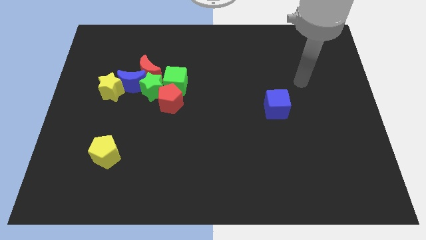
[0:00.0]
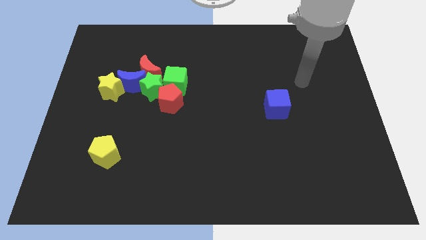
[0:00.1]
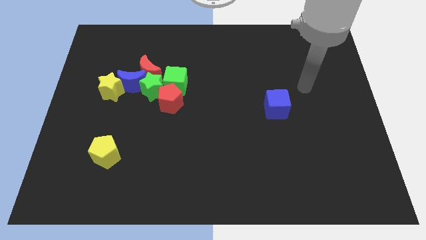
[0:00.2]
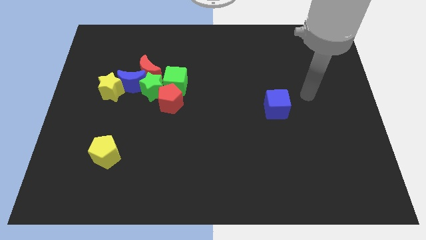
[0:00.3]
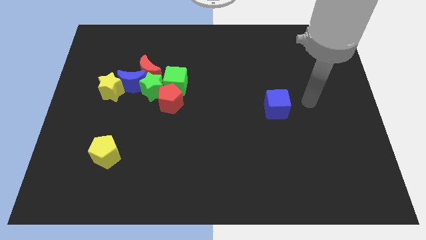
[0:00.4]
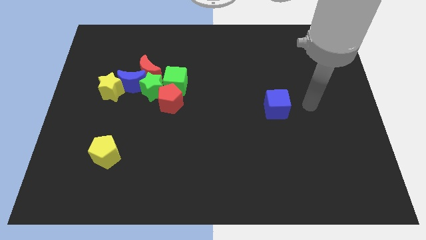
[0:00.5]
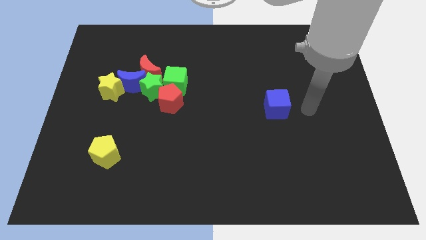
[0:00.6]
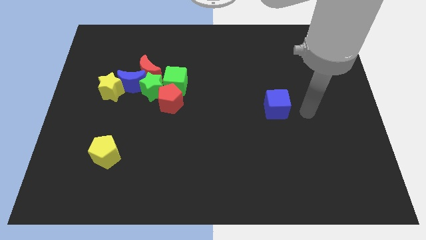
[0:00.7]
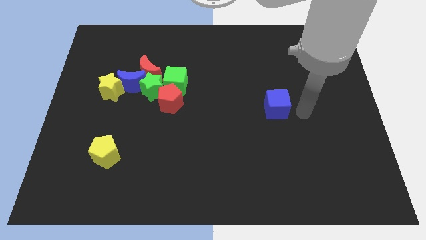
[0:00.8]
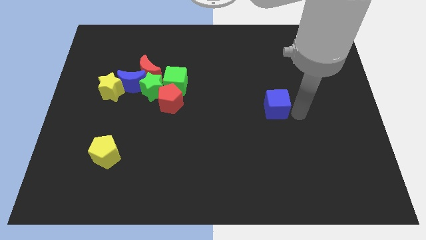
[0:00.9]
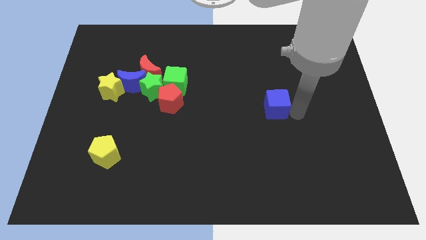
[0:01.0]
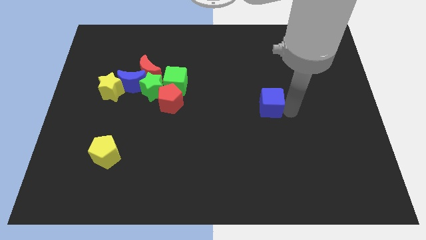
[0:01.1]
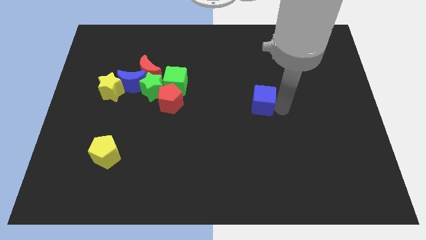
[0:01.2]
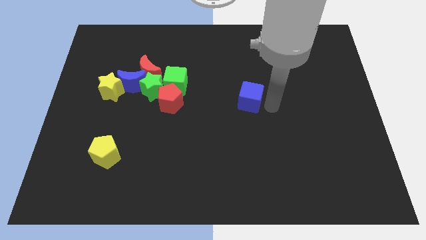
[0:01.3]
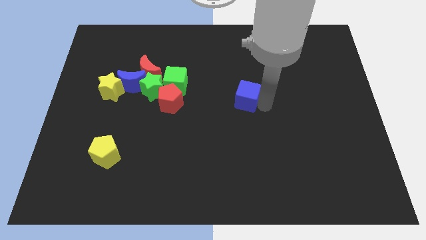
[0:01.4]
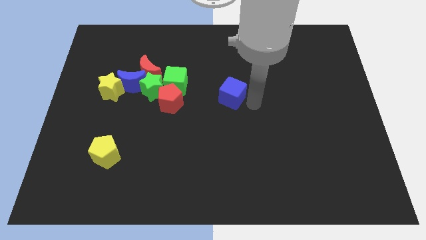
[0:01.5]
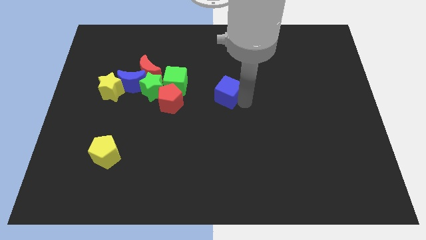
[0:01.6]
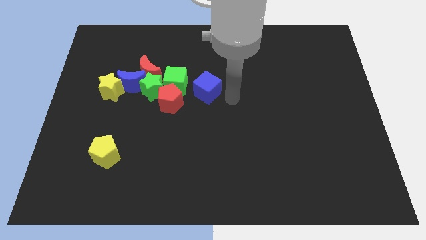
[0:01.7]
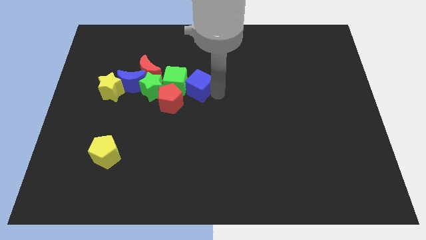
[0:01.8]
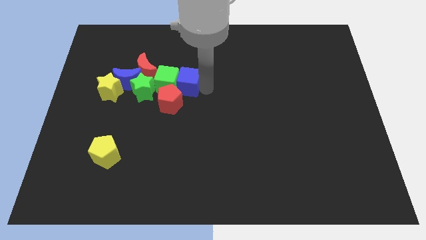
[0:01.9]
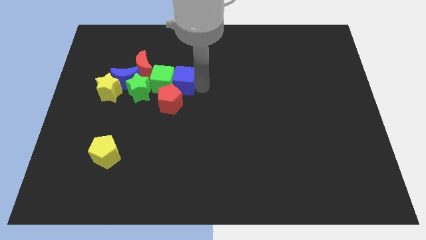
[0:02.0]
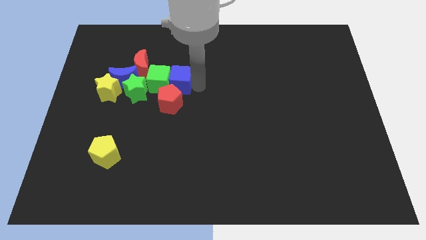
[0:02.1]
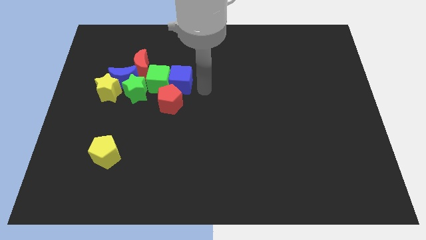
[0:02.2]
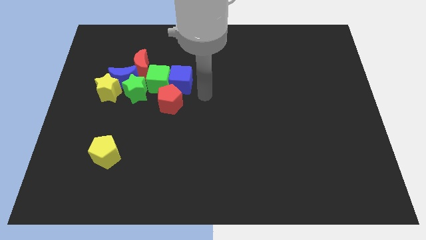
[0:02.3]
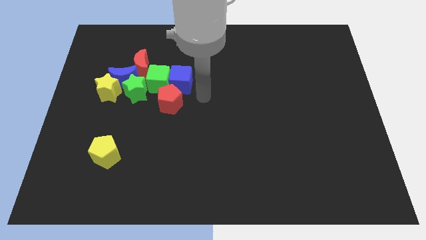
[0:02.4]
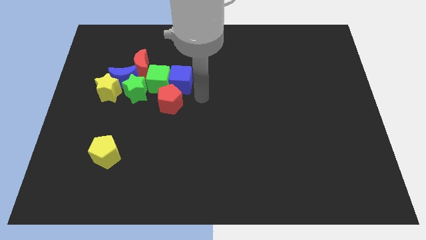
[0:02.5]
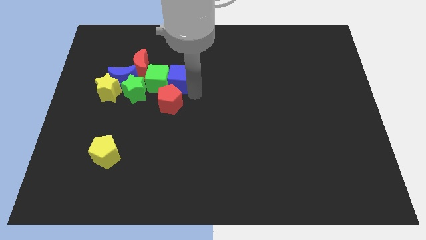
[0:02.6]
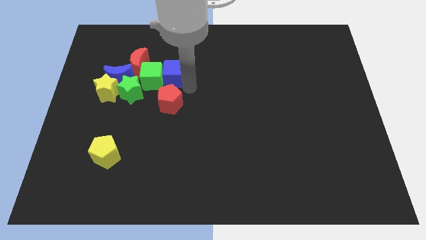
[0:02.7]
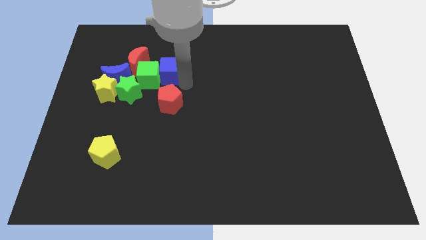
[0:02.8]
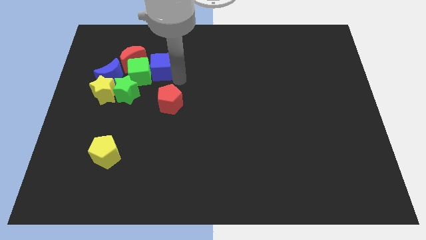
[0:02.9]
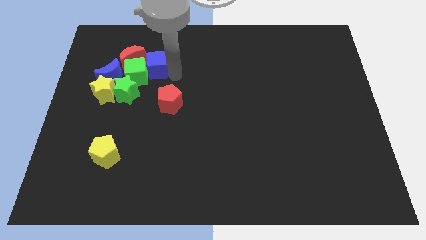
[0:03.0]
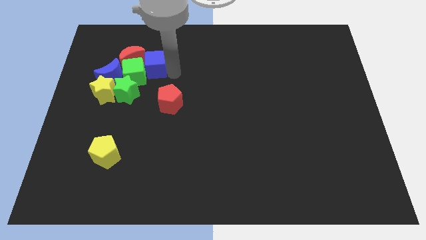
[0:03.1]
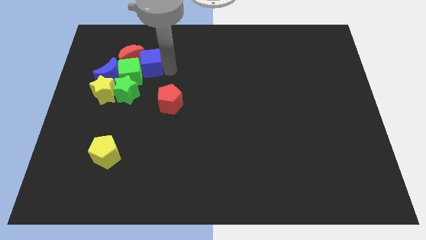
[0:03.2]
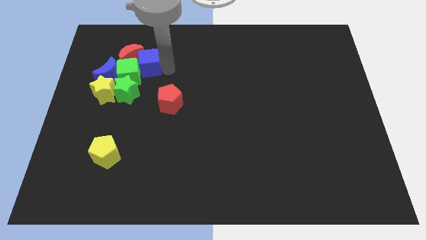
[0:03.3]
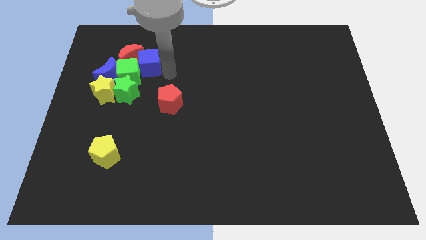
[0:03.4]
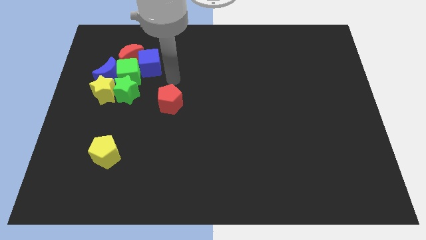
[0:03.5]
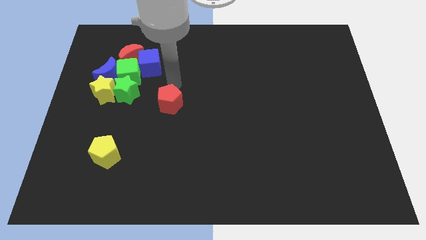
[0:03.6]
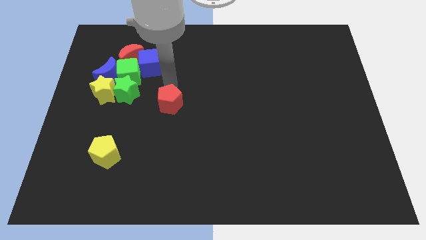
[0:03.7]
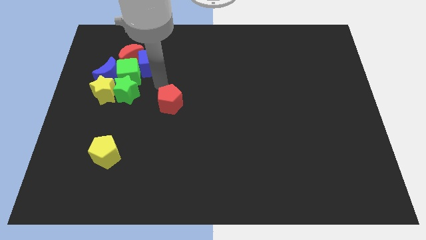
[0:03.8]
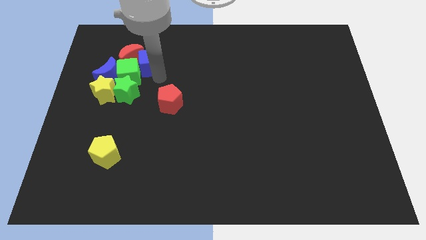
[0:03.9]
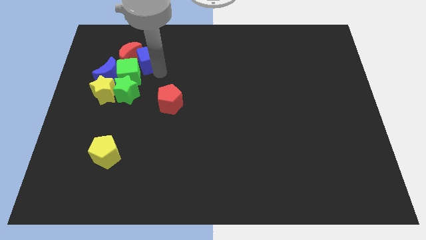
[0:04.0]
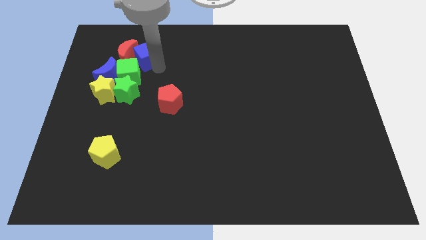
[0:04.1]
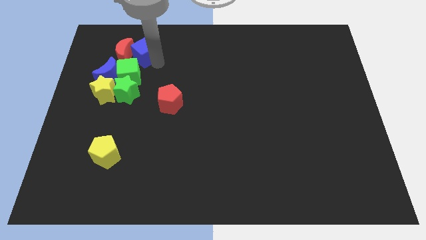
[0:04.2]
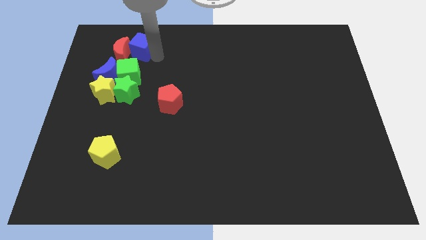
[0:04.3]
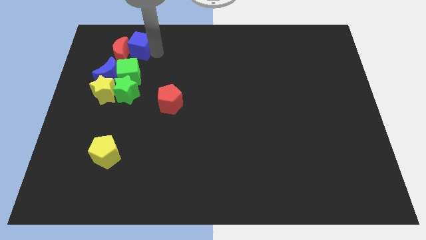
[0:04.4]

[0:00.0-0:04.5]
push the blue cube into the group of blocks

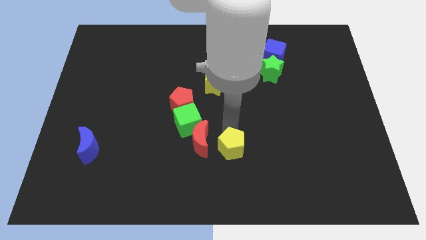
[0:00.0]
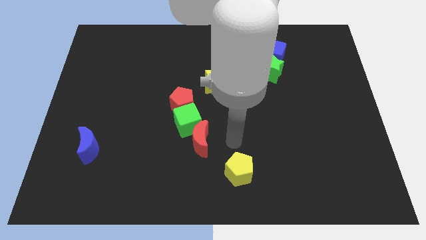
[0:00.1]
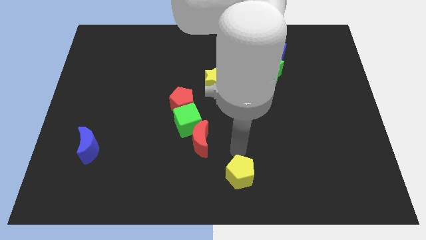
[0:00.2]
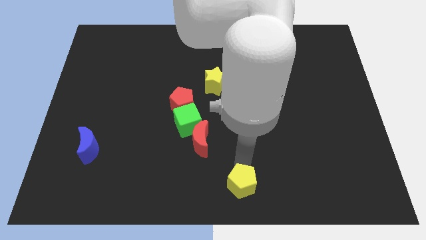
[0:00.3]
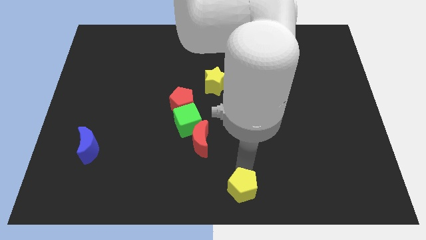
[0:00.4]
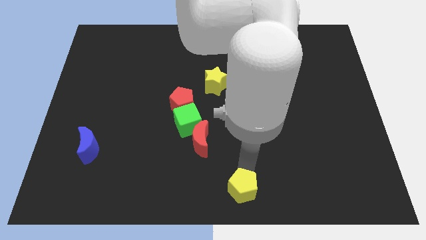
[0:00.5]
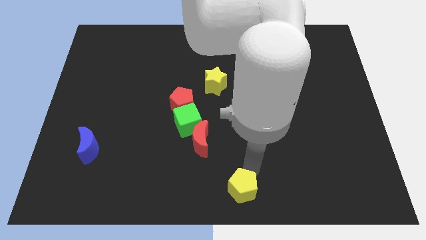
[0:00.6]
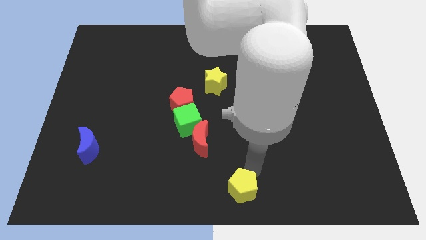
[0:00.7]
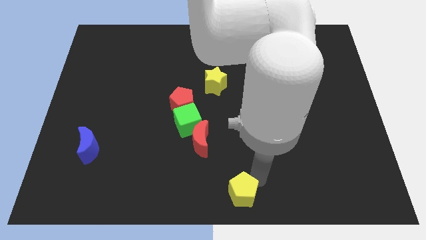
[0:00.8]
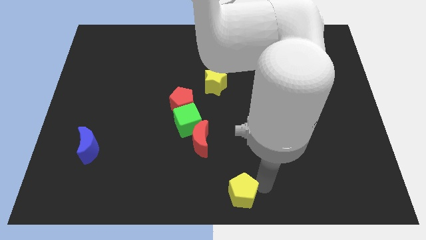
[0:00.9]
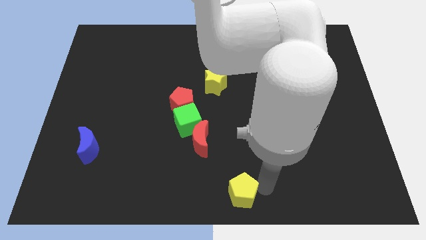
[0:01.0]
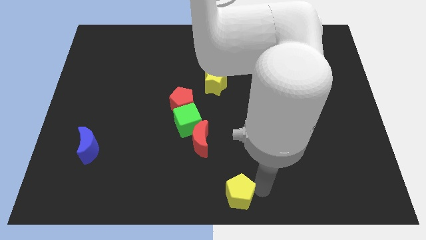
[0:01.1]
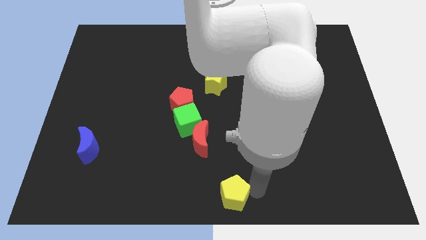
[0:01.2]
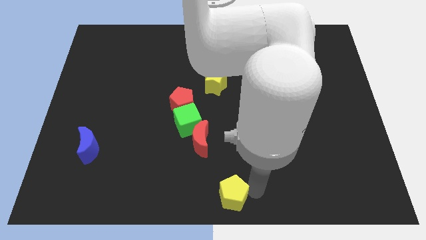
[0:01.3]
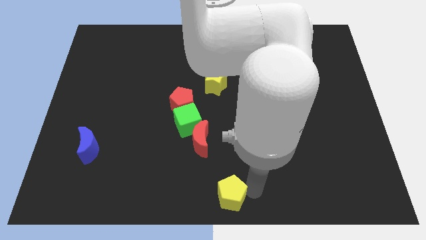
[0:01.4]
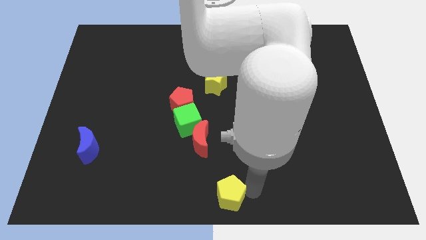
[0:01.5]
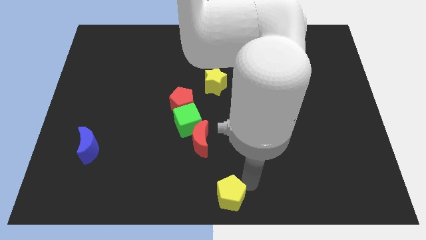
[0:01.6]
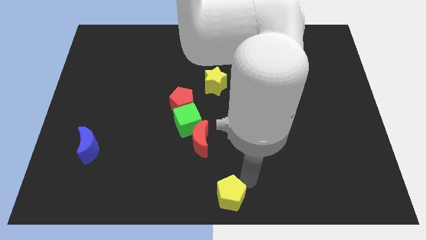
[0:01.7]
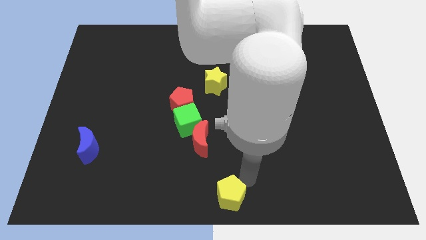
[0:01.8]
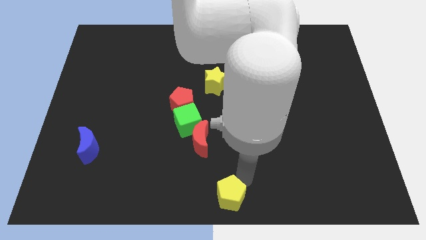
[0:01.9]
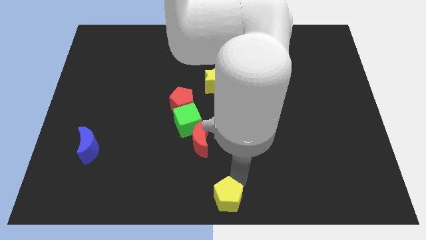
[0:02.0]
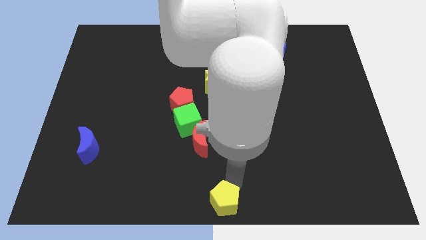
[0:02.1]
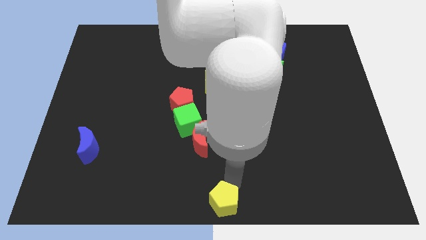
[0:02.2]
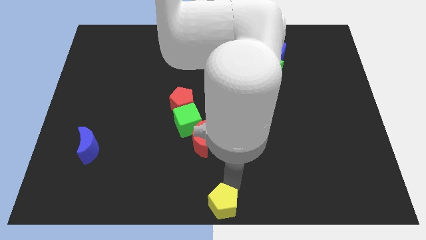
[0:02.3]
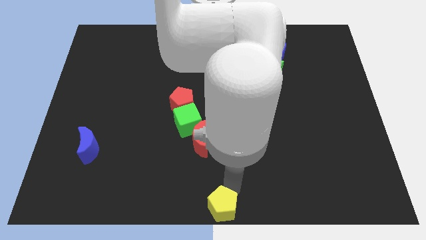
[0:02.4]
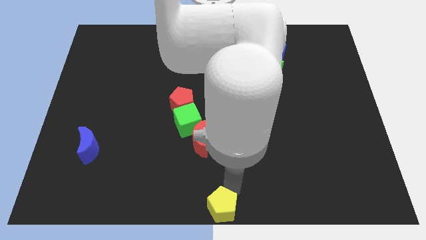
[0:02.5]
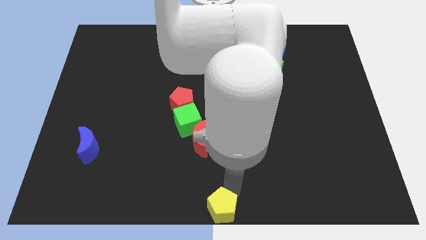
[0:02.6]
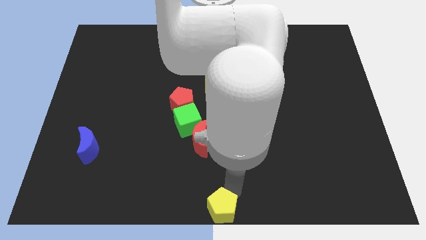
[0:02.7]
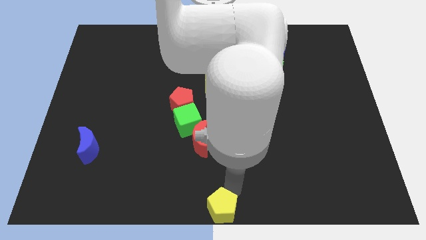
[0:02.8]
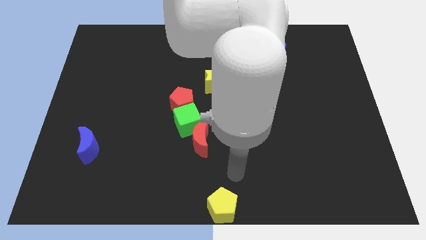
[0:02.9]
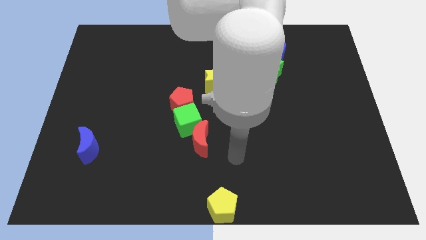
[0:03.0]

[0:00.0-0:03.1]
put yellow pentagon vertically below yellow star

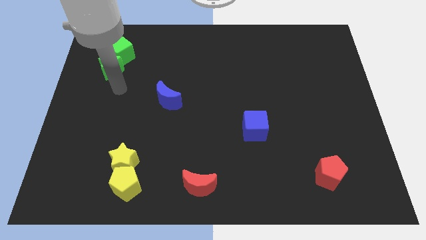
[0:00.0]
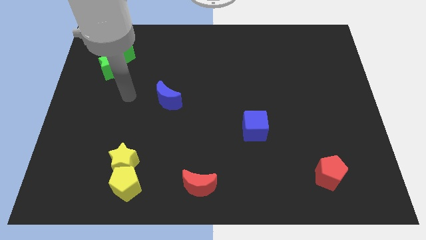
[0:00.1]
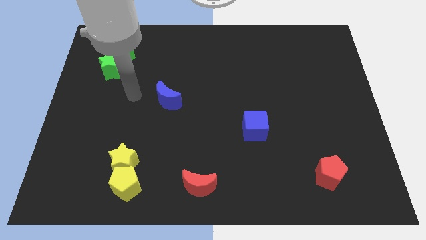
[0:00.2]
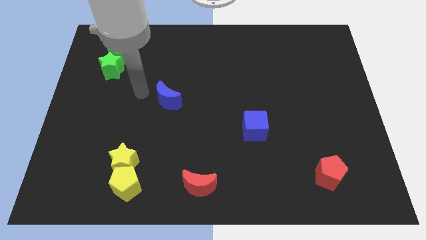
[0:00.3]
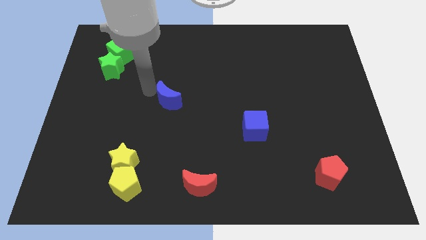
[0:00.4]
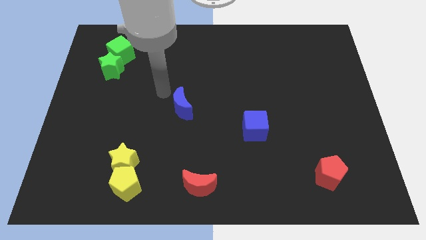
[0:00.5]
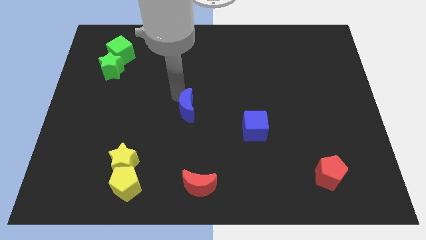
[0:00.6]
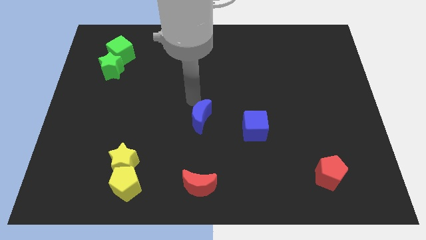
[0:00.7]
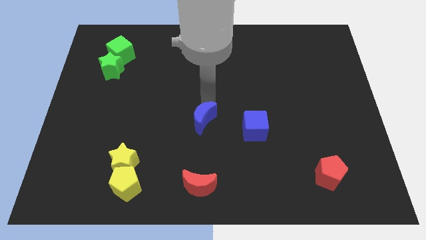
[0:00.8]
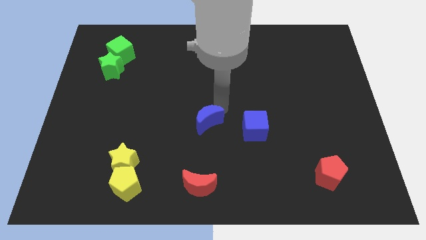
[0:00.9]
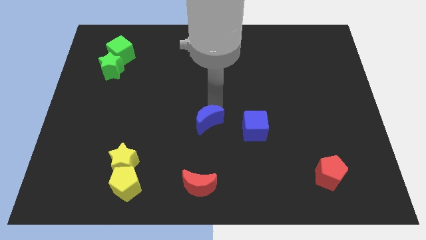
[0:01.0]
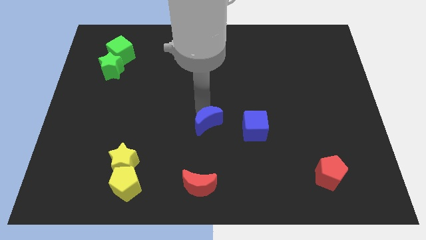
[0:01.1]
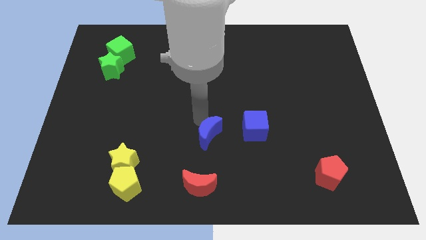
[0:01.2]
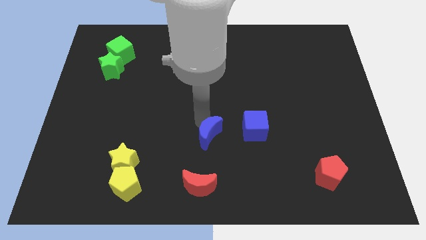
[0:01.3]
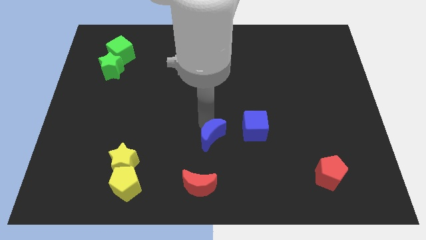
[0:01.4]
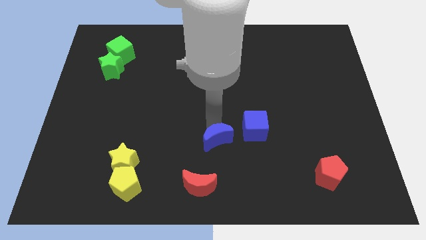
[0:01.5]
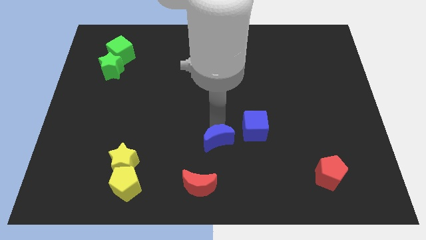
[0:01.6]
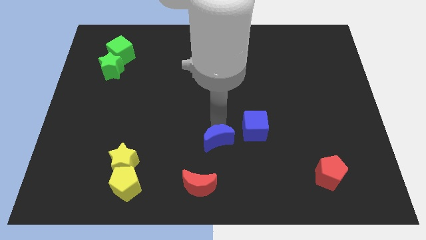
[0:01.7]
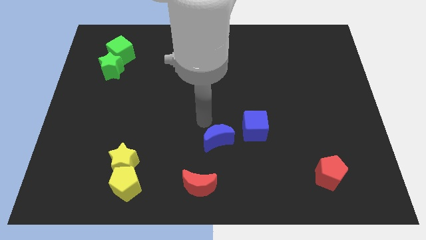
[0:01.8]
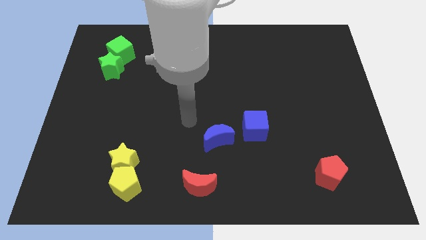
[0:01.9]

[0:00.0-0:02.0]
move the blue moon left to the blue cube
